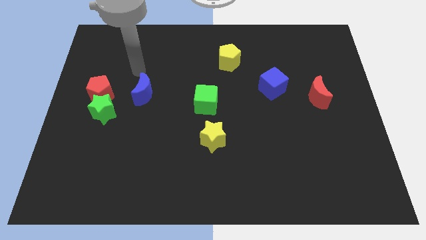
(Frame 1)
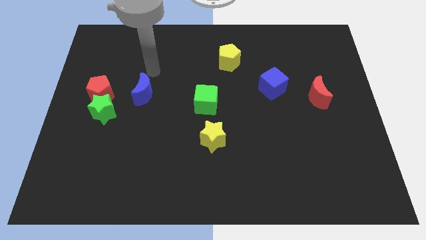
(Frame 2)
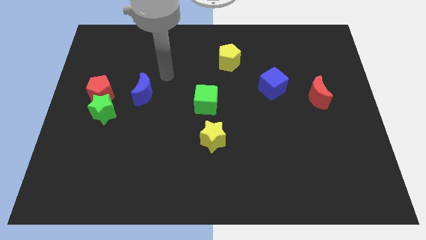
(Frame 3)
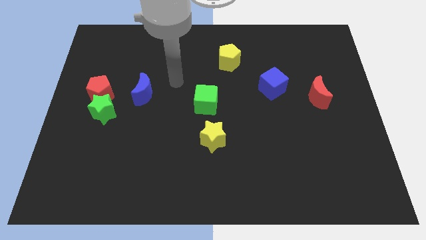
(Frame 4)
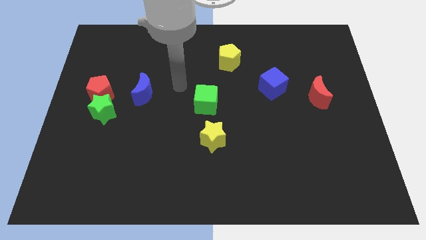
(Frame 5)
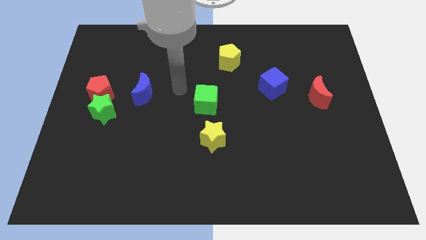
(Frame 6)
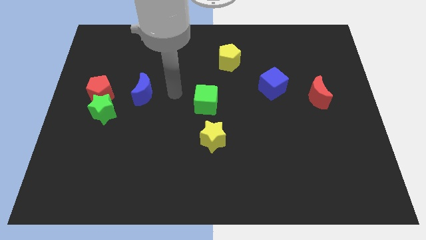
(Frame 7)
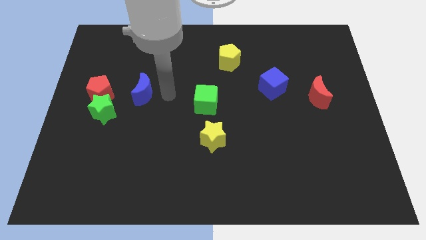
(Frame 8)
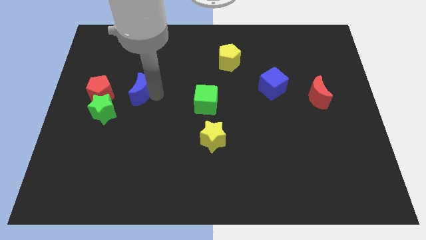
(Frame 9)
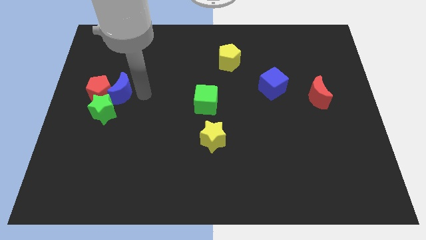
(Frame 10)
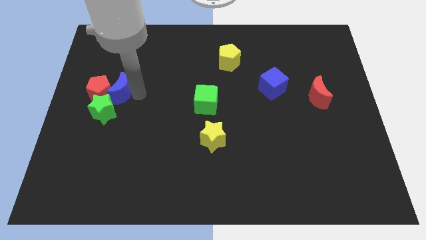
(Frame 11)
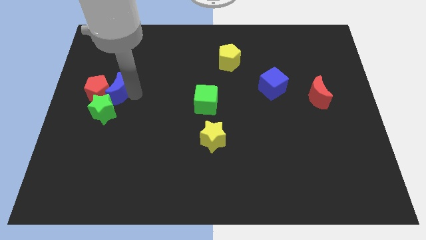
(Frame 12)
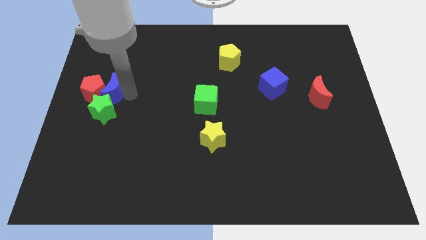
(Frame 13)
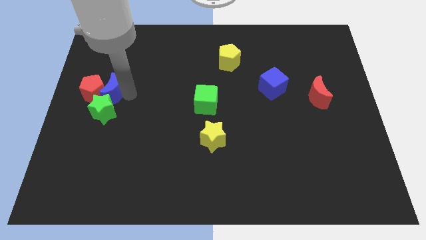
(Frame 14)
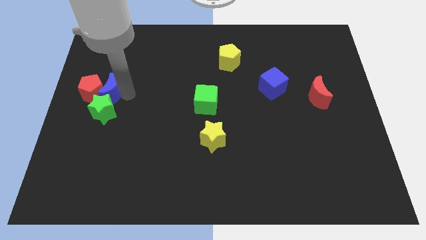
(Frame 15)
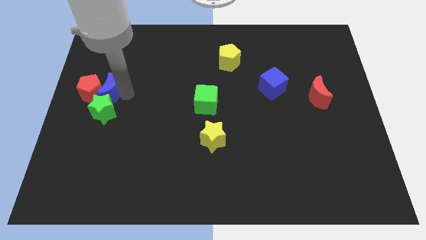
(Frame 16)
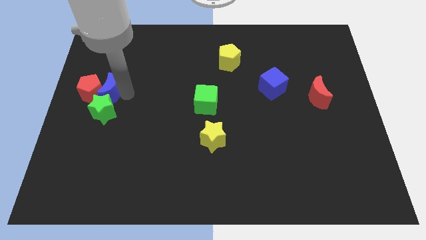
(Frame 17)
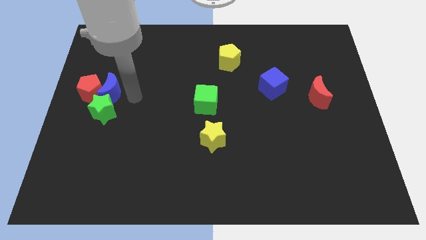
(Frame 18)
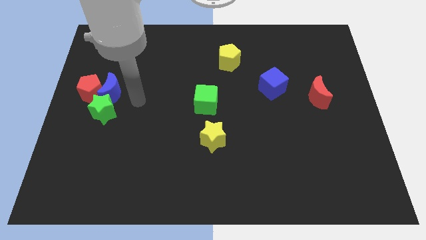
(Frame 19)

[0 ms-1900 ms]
place the red pentagon diagonally top left to the green star

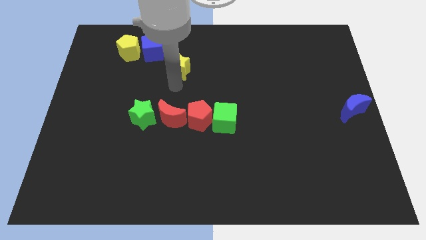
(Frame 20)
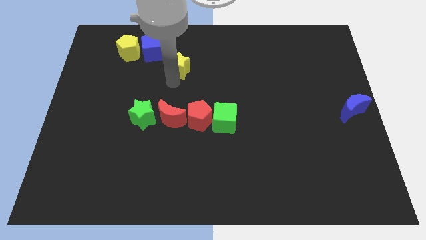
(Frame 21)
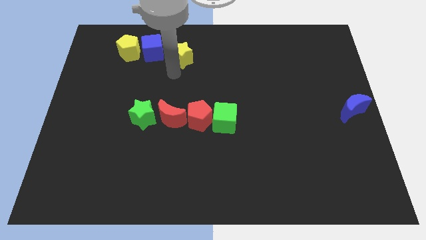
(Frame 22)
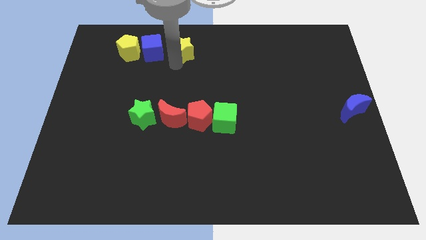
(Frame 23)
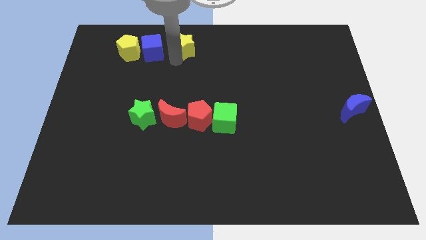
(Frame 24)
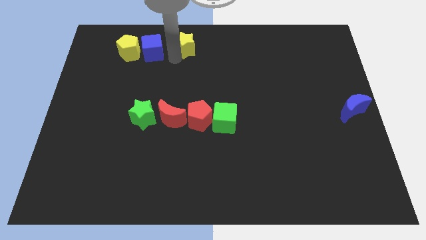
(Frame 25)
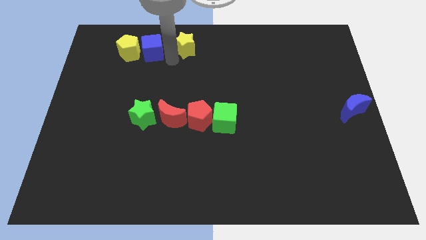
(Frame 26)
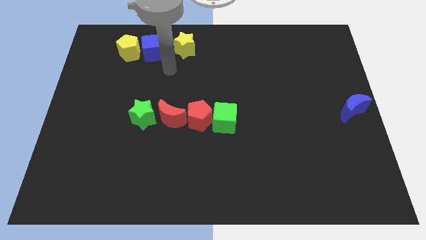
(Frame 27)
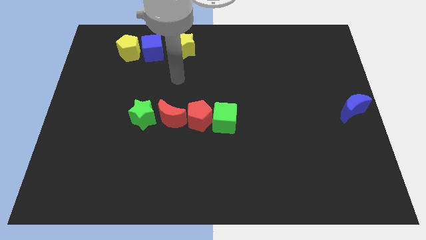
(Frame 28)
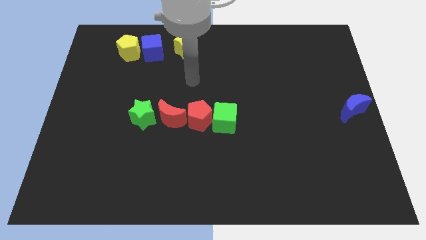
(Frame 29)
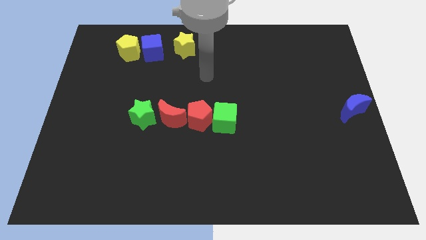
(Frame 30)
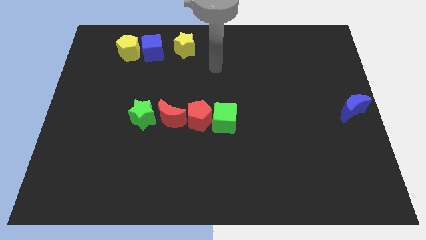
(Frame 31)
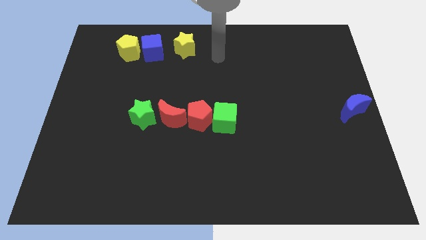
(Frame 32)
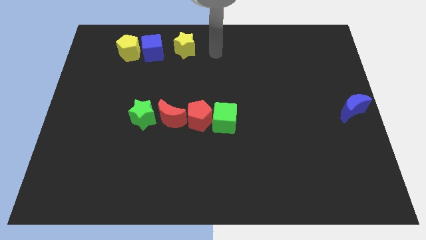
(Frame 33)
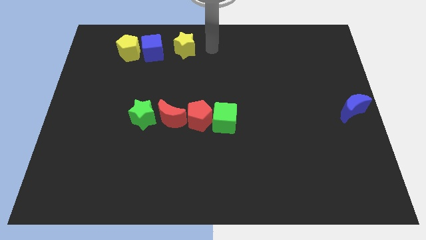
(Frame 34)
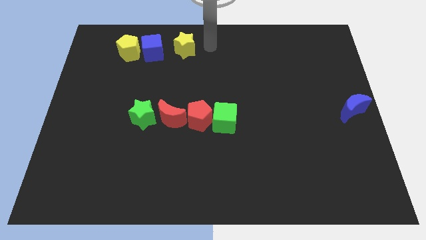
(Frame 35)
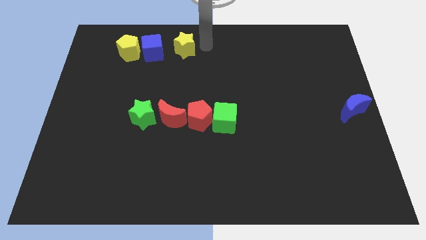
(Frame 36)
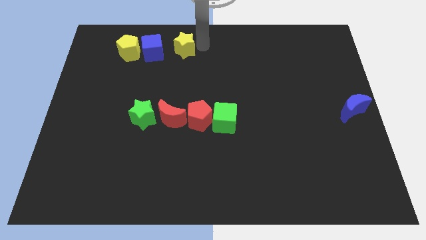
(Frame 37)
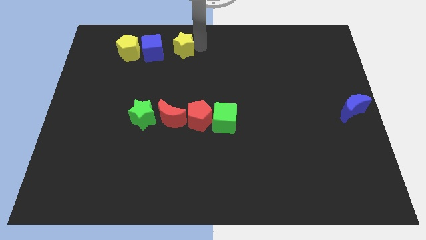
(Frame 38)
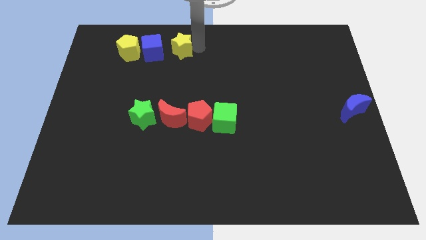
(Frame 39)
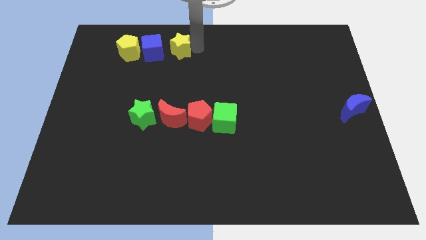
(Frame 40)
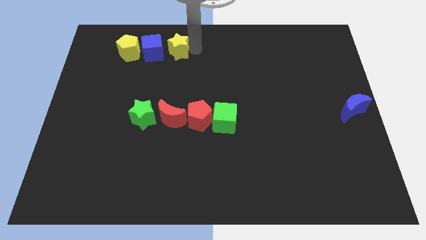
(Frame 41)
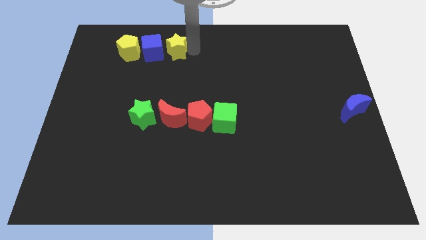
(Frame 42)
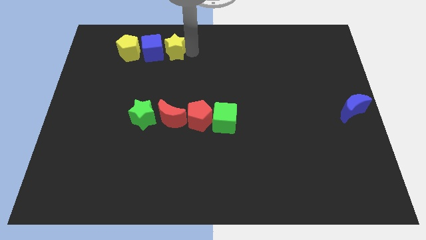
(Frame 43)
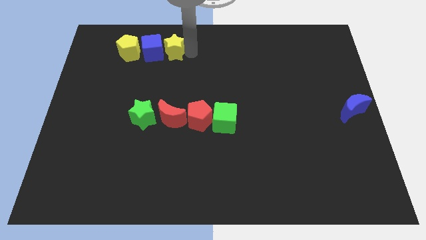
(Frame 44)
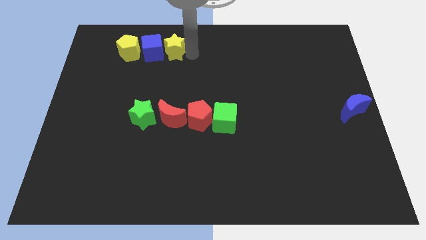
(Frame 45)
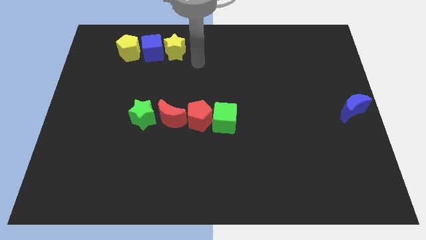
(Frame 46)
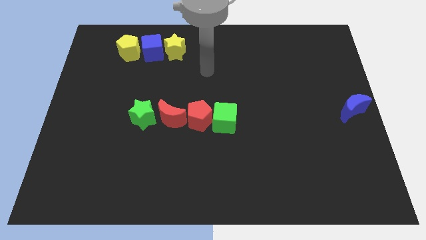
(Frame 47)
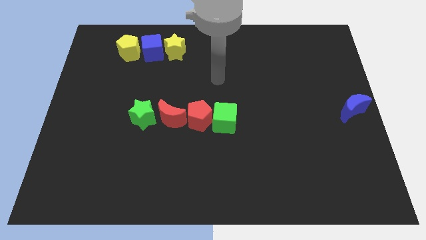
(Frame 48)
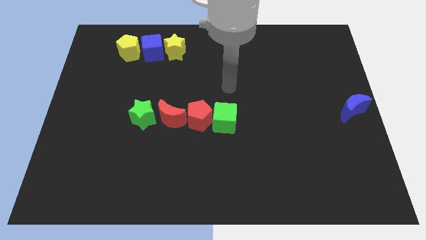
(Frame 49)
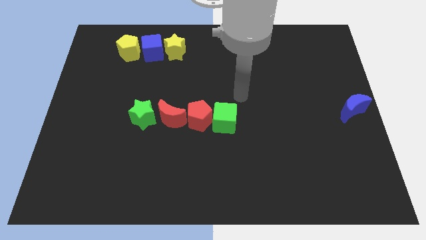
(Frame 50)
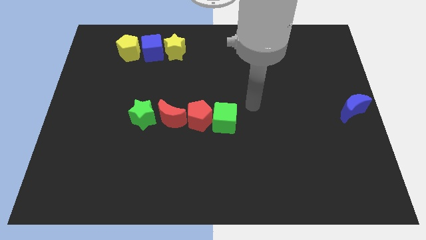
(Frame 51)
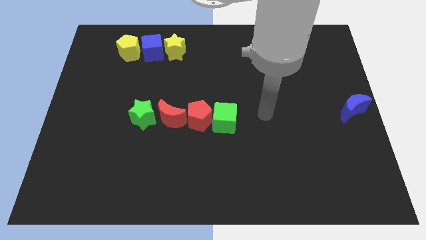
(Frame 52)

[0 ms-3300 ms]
place yellow star to the right of blue cube

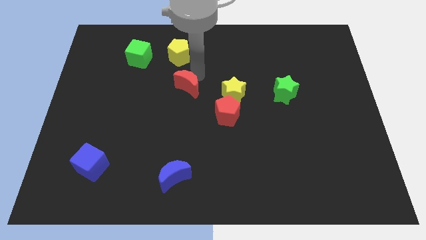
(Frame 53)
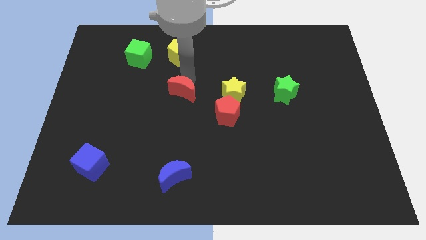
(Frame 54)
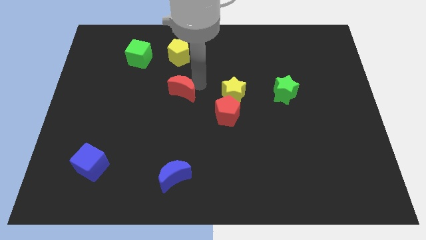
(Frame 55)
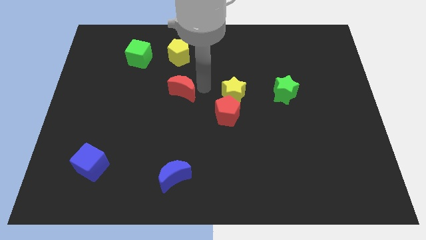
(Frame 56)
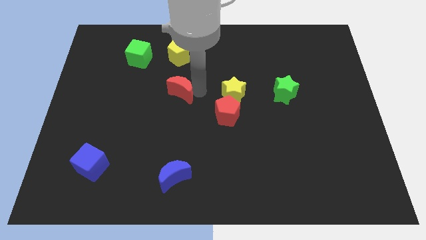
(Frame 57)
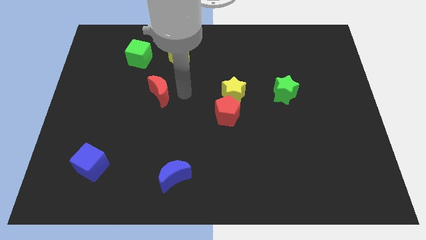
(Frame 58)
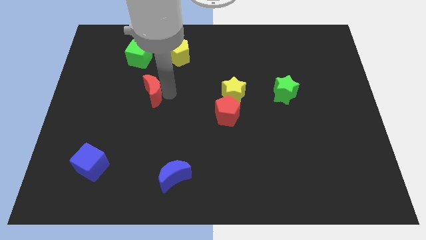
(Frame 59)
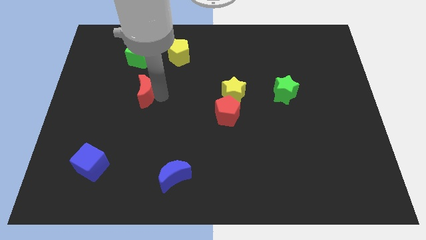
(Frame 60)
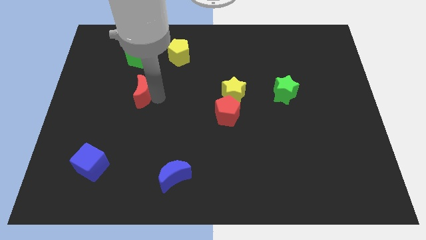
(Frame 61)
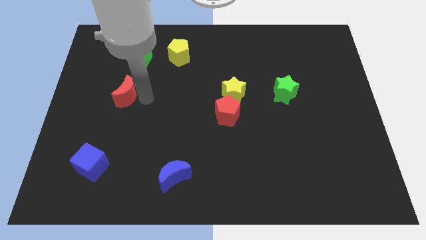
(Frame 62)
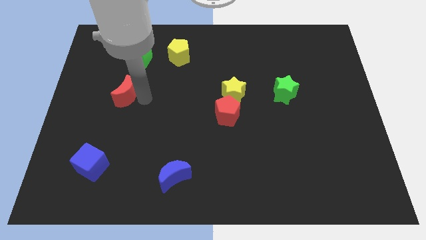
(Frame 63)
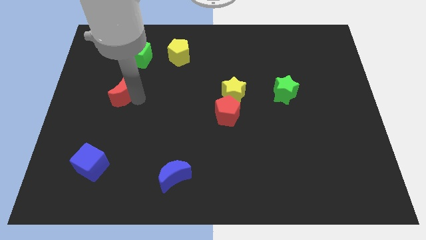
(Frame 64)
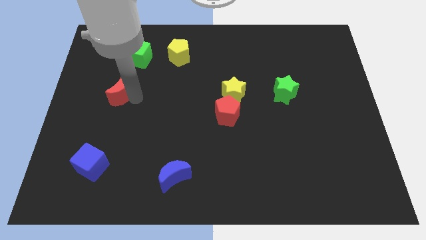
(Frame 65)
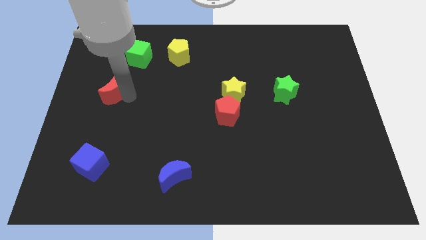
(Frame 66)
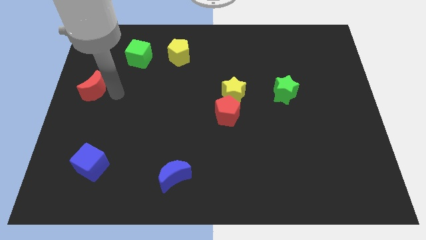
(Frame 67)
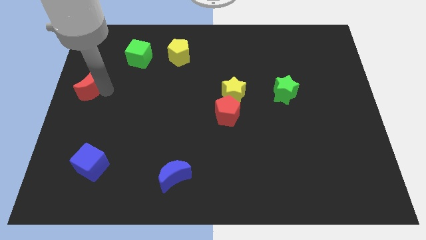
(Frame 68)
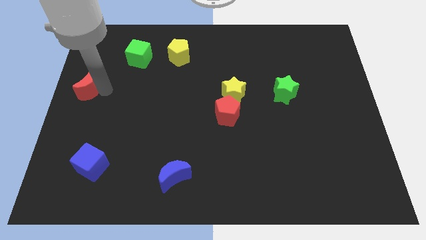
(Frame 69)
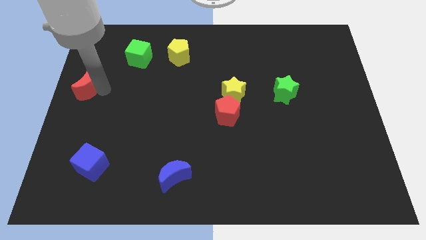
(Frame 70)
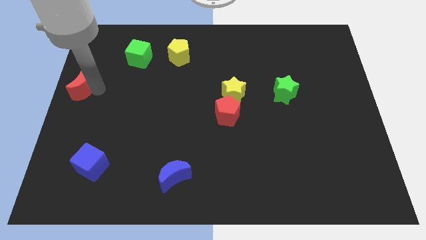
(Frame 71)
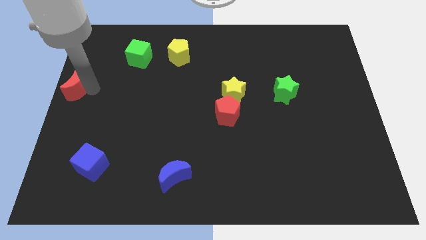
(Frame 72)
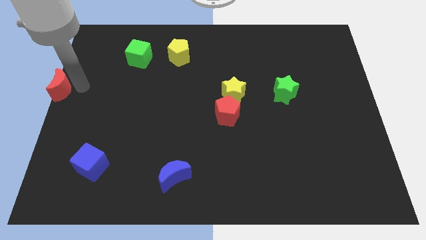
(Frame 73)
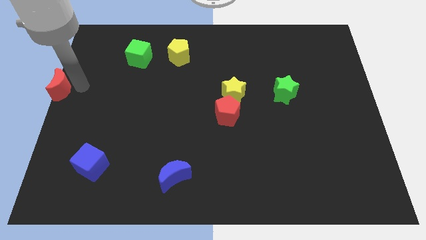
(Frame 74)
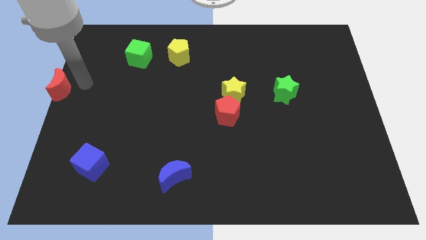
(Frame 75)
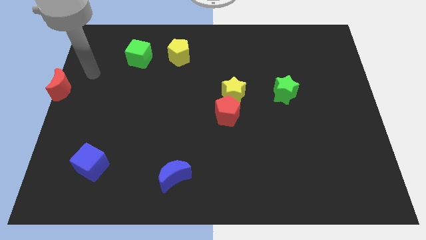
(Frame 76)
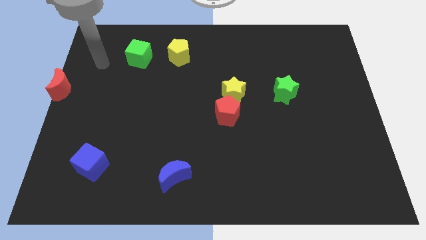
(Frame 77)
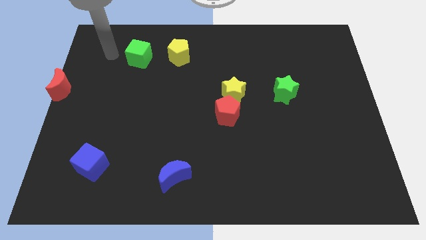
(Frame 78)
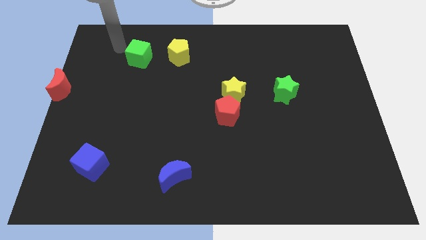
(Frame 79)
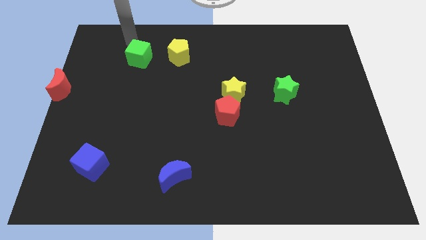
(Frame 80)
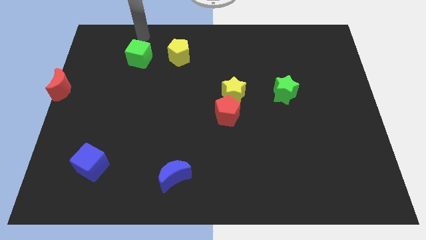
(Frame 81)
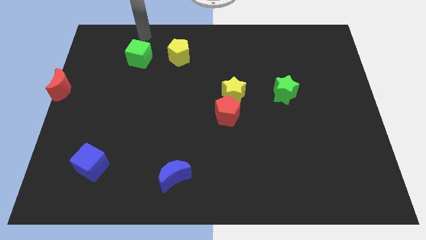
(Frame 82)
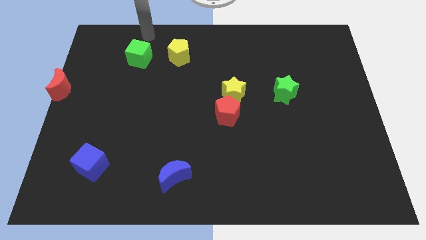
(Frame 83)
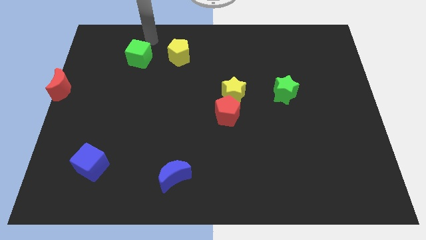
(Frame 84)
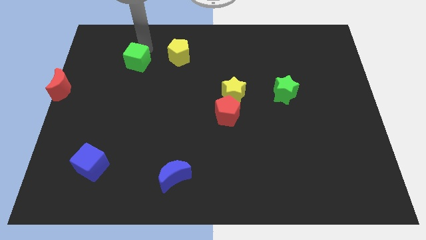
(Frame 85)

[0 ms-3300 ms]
move red crescent to the top center

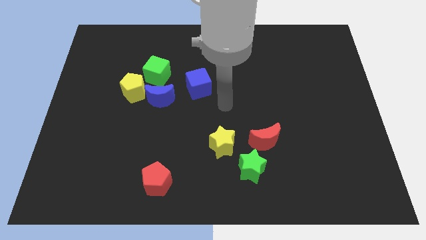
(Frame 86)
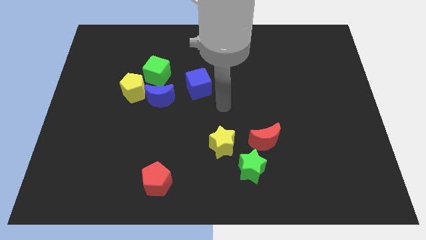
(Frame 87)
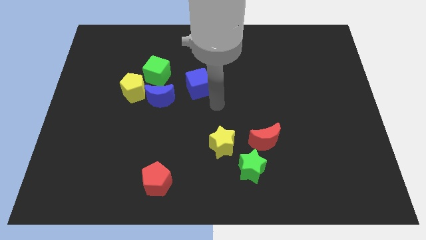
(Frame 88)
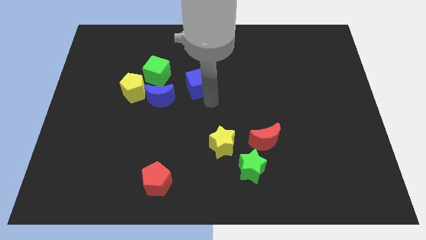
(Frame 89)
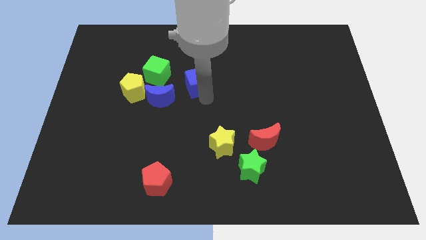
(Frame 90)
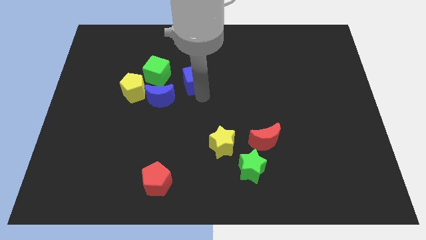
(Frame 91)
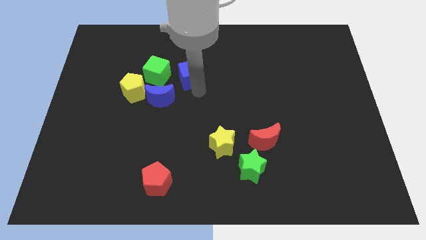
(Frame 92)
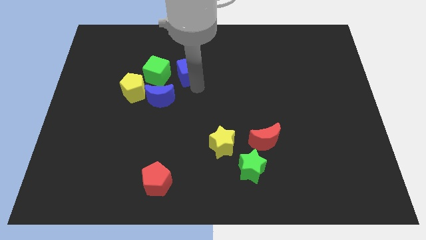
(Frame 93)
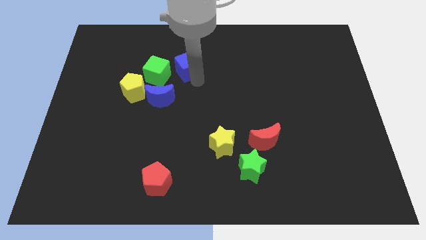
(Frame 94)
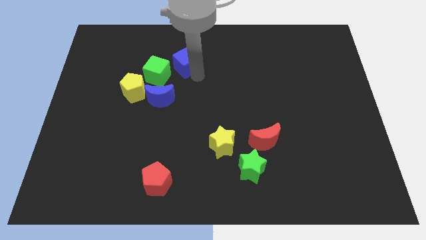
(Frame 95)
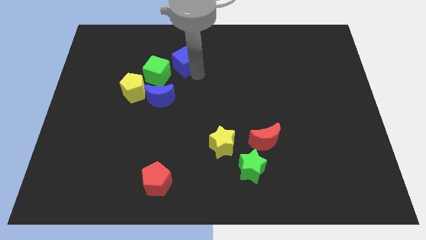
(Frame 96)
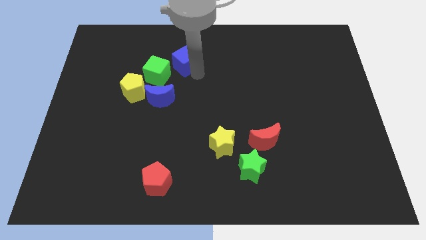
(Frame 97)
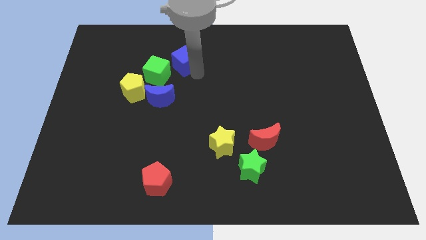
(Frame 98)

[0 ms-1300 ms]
place the blue block diagonal to the right side of the green cube
